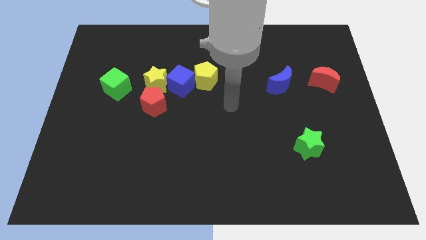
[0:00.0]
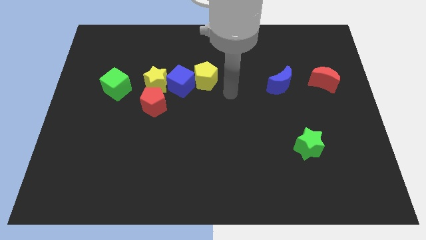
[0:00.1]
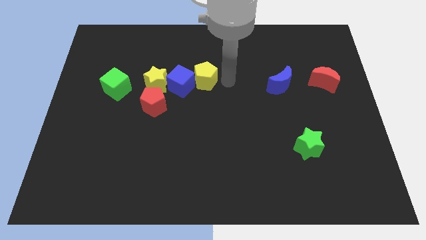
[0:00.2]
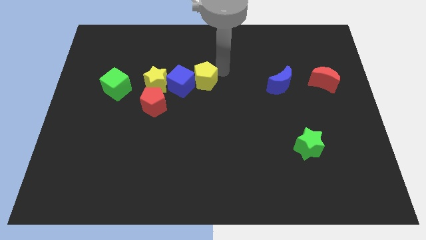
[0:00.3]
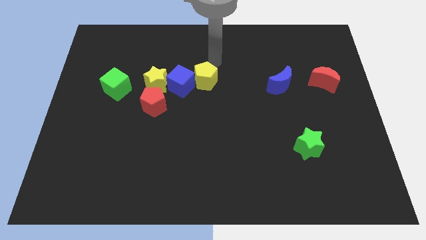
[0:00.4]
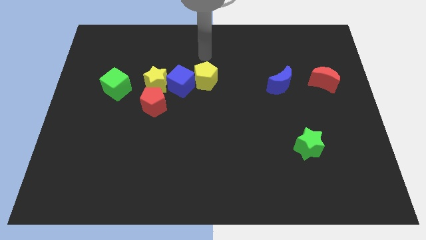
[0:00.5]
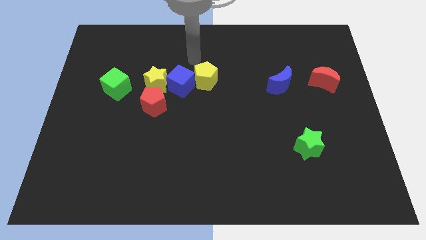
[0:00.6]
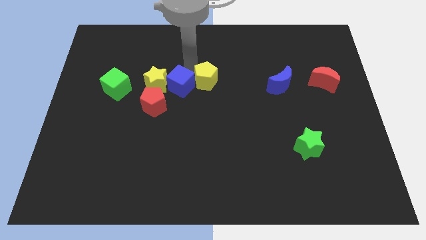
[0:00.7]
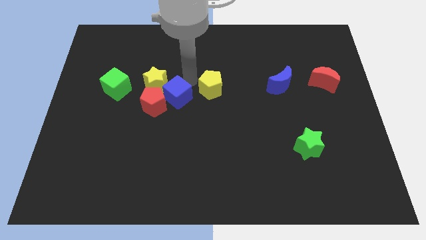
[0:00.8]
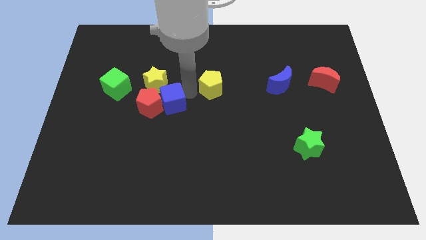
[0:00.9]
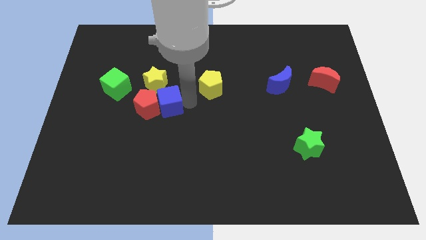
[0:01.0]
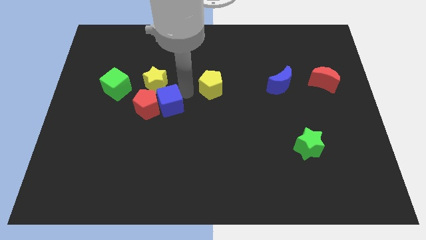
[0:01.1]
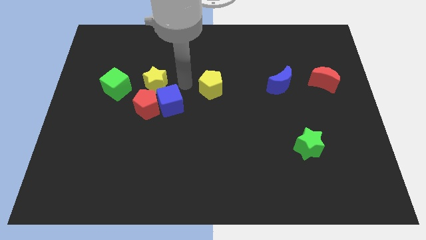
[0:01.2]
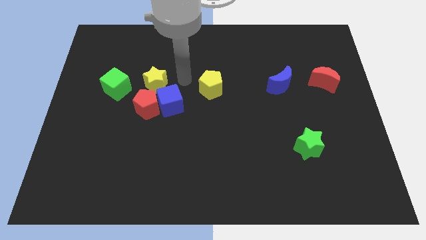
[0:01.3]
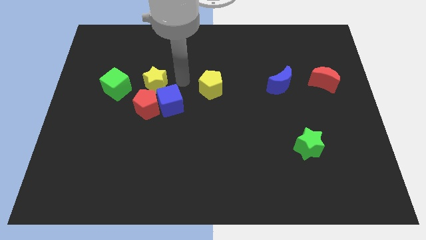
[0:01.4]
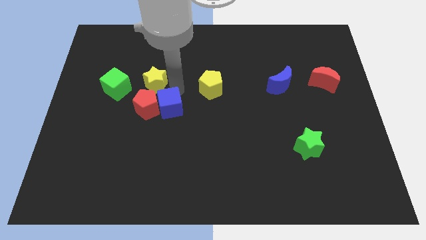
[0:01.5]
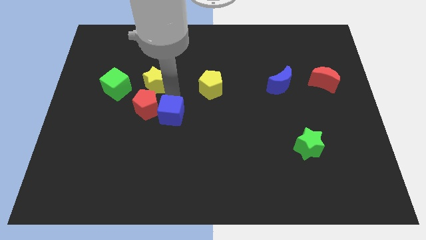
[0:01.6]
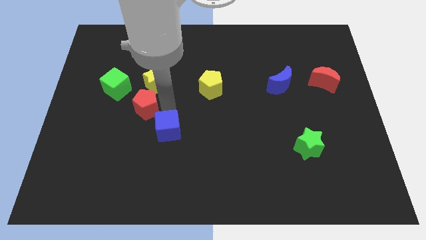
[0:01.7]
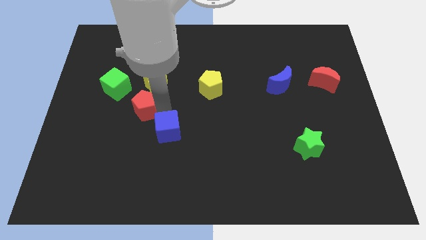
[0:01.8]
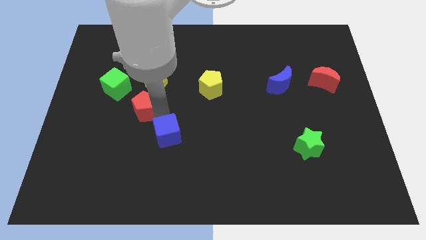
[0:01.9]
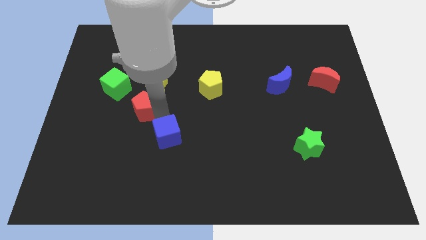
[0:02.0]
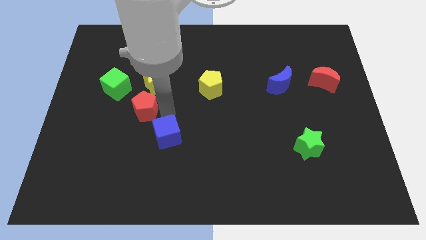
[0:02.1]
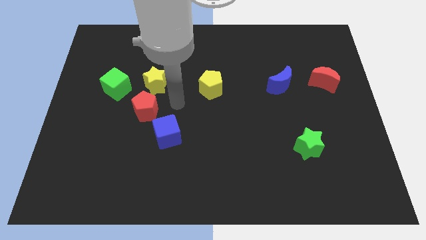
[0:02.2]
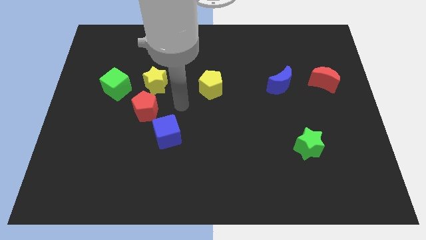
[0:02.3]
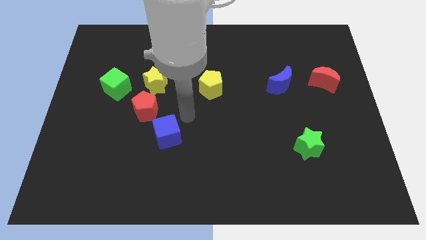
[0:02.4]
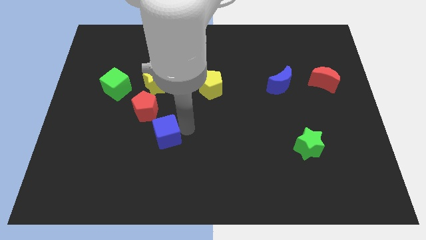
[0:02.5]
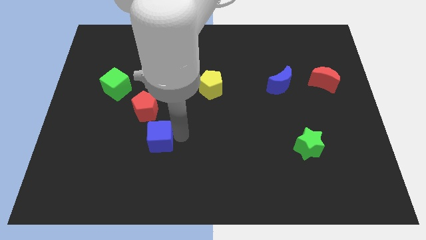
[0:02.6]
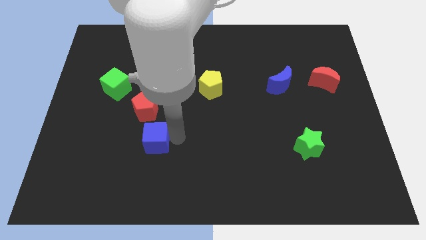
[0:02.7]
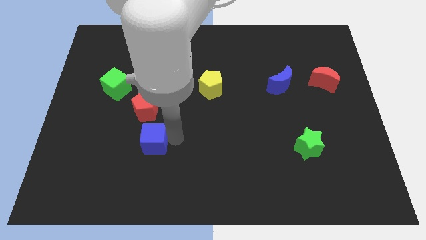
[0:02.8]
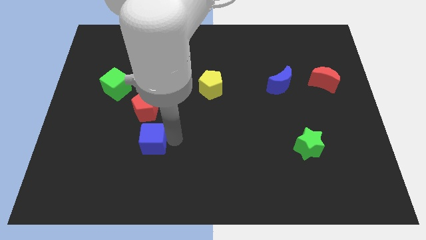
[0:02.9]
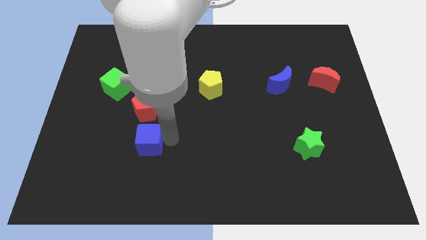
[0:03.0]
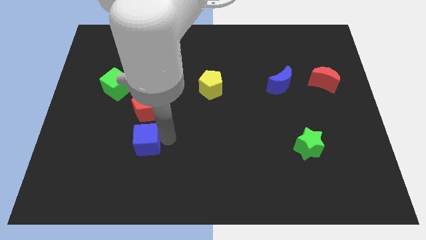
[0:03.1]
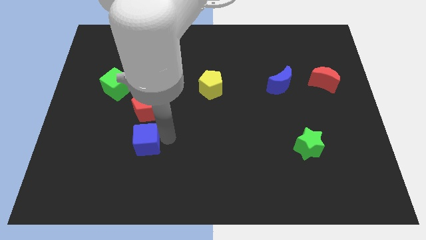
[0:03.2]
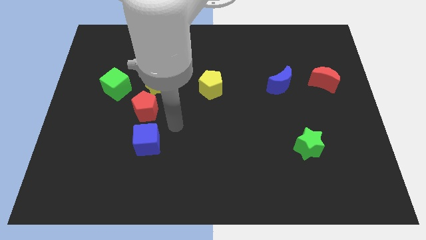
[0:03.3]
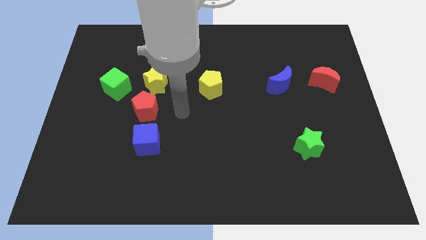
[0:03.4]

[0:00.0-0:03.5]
move the blue cube below the red pentagon

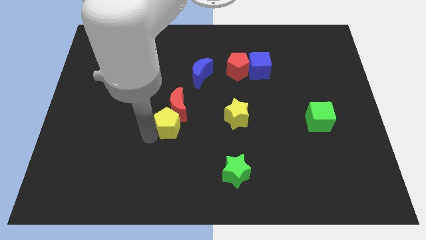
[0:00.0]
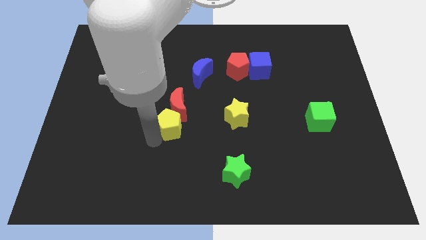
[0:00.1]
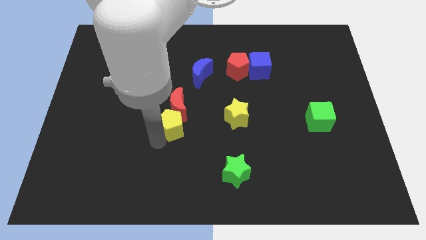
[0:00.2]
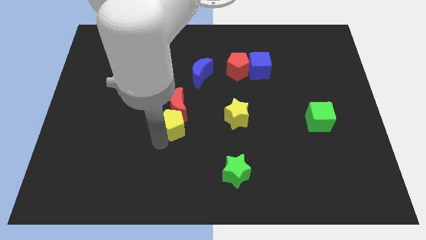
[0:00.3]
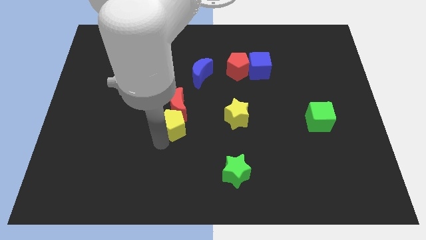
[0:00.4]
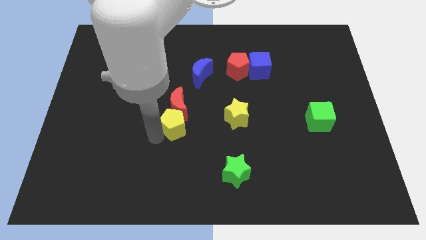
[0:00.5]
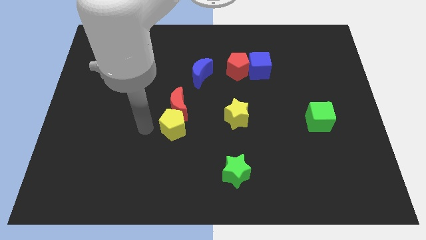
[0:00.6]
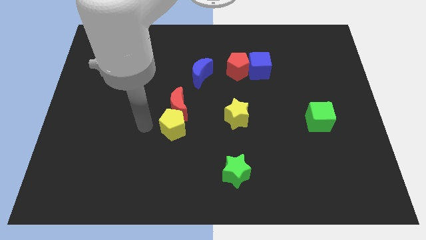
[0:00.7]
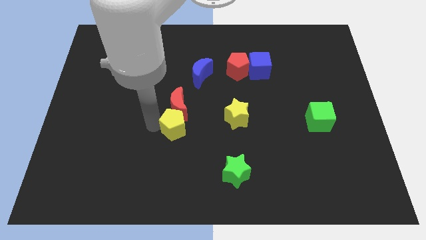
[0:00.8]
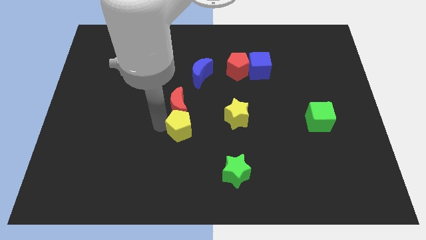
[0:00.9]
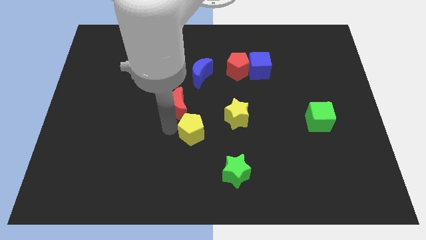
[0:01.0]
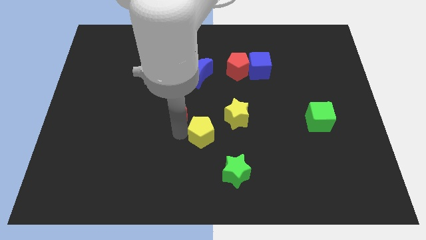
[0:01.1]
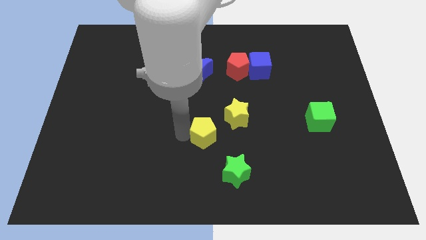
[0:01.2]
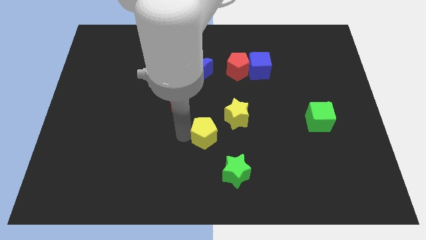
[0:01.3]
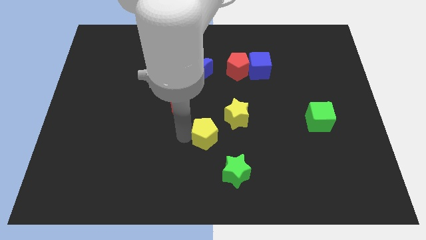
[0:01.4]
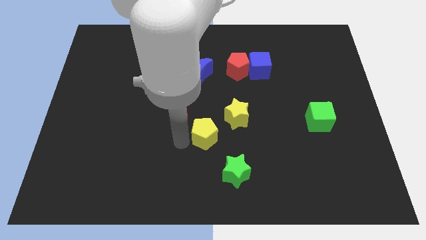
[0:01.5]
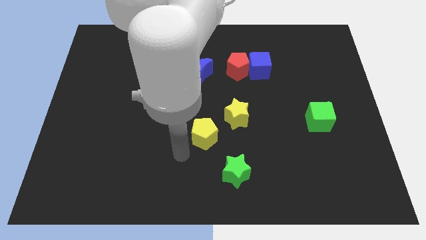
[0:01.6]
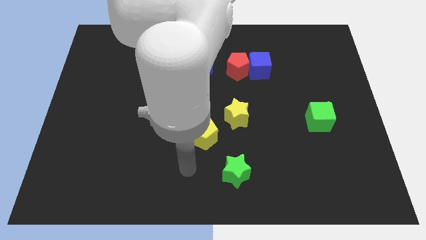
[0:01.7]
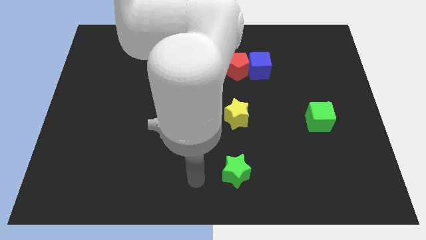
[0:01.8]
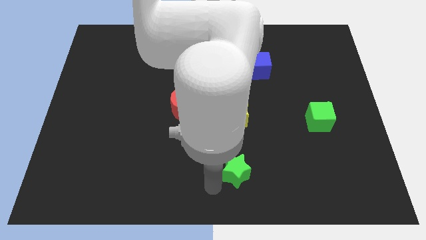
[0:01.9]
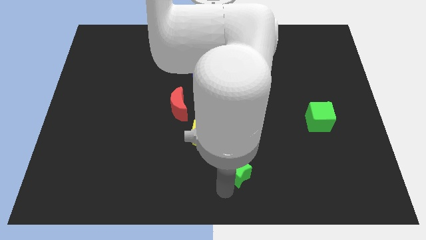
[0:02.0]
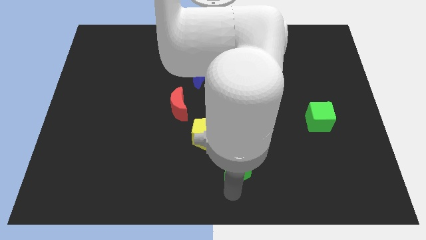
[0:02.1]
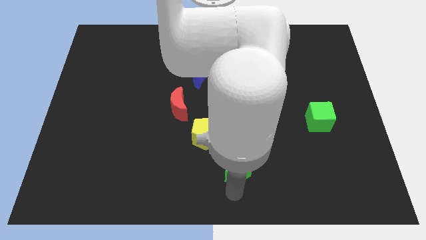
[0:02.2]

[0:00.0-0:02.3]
place yourself below green star

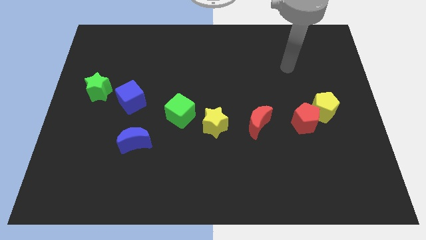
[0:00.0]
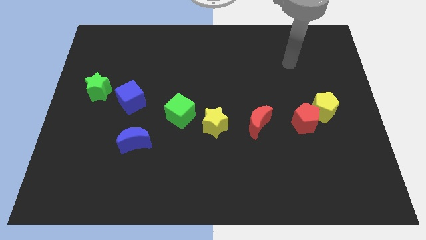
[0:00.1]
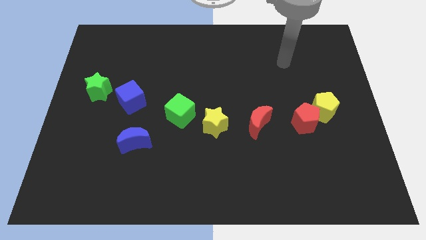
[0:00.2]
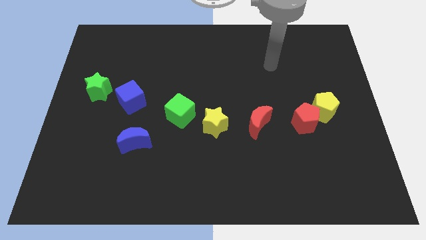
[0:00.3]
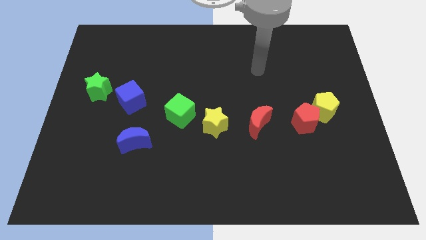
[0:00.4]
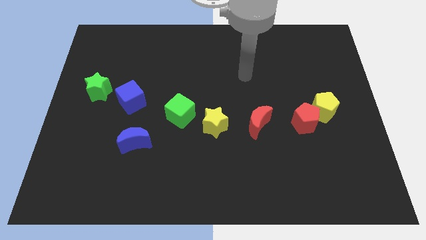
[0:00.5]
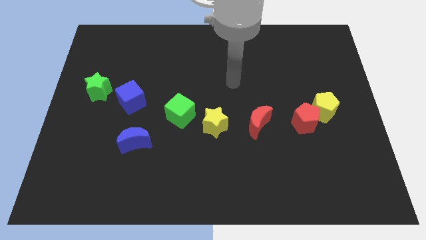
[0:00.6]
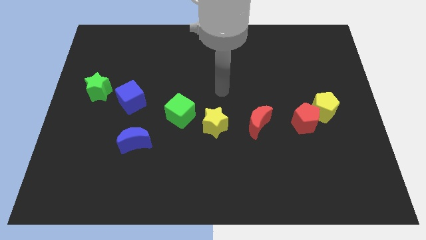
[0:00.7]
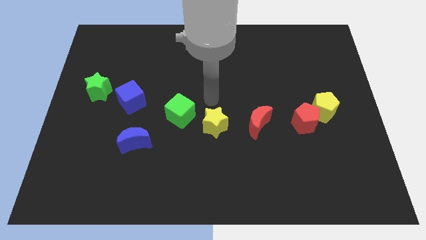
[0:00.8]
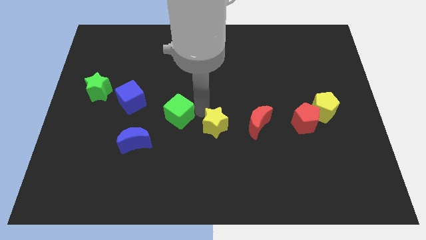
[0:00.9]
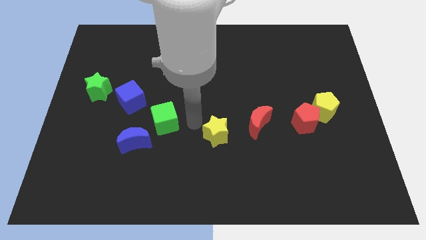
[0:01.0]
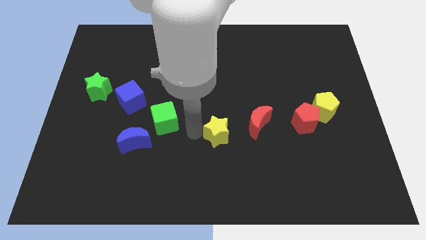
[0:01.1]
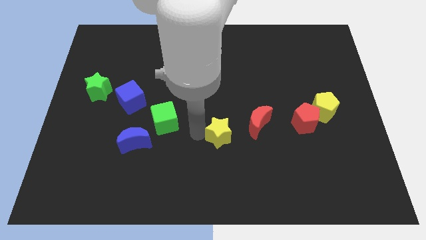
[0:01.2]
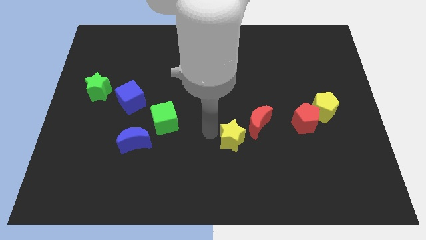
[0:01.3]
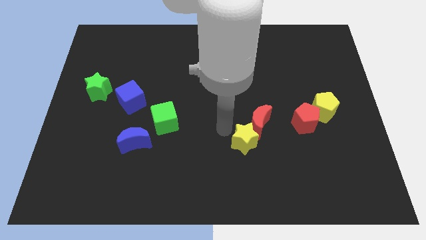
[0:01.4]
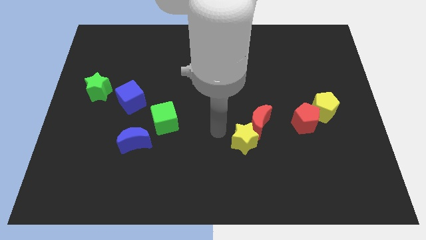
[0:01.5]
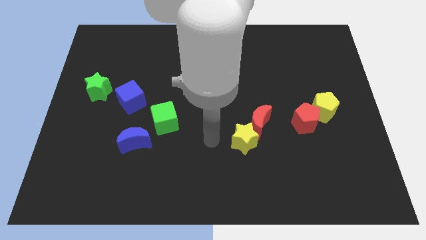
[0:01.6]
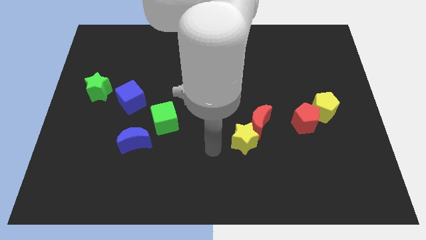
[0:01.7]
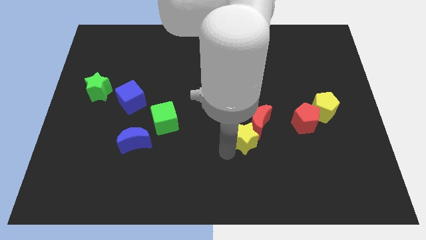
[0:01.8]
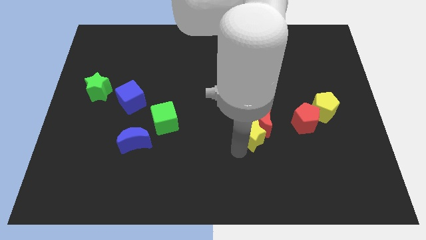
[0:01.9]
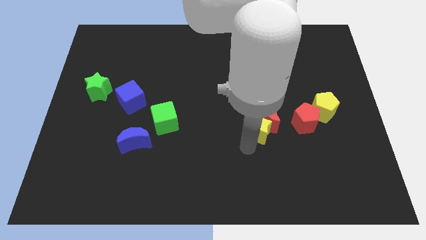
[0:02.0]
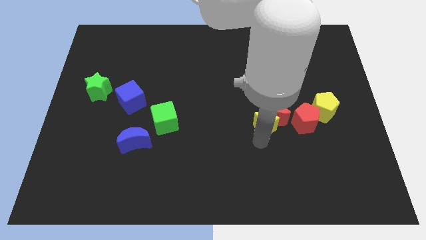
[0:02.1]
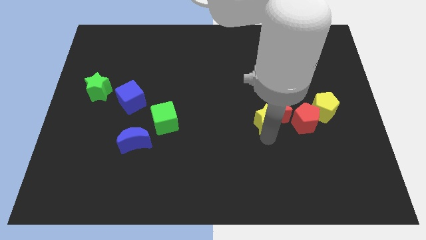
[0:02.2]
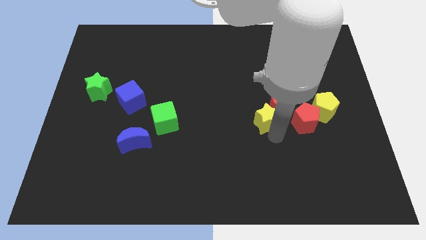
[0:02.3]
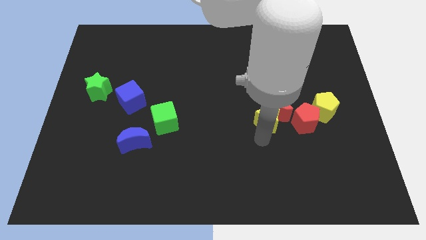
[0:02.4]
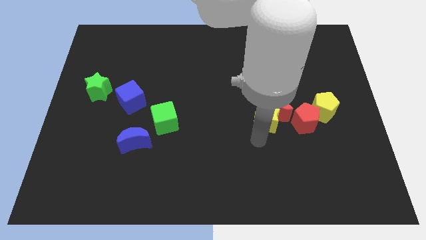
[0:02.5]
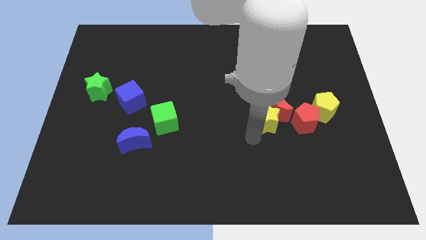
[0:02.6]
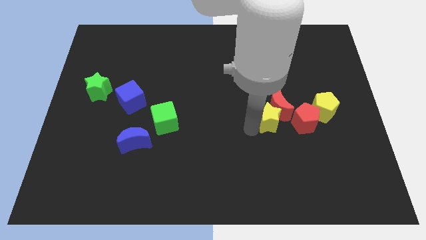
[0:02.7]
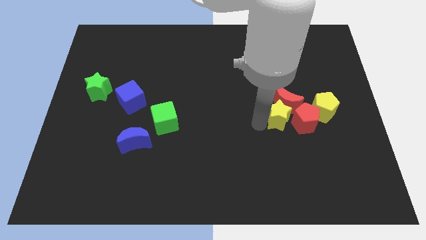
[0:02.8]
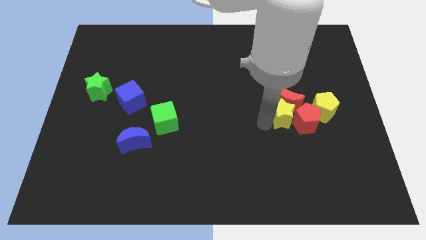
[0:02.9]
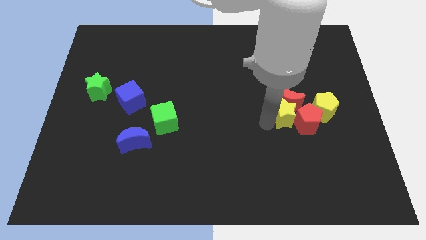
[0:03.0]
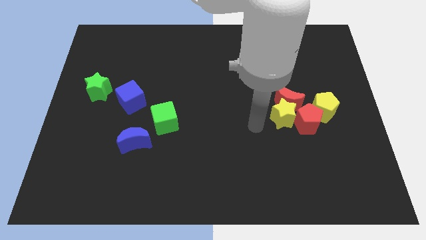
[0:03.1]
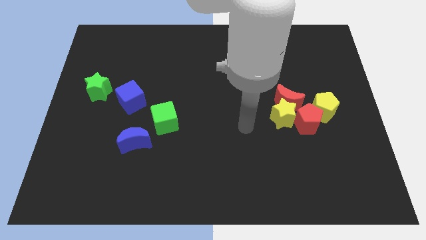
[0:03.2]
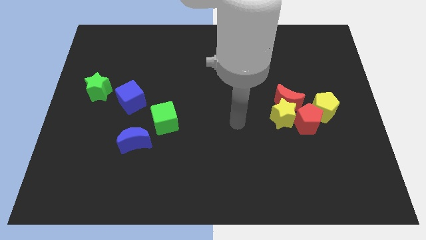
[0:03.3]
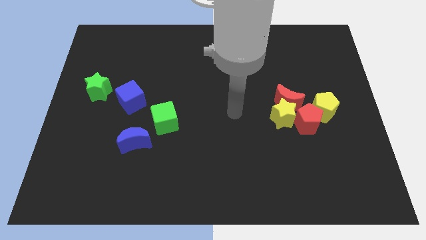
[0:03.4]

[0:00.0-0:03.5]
push yellow star towards group of blocks
